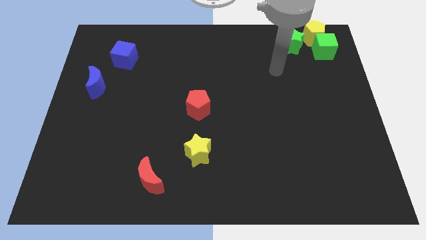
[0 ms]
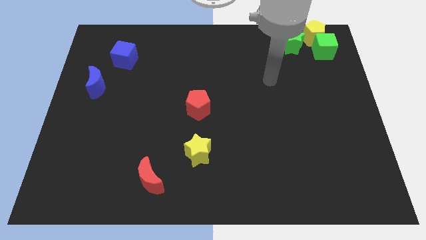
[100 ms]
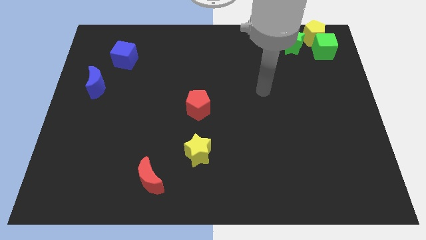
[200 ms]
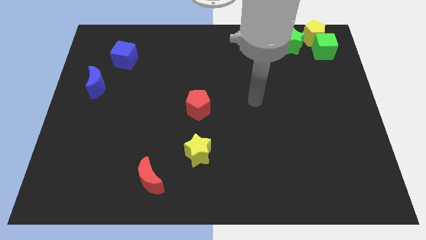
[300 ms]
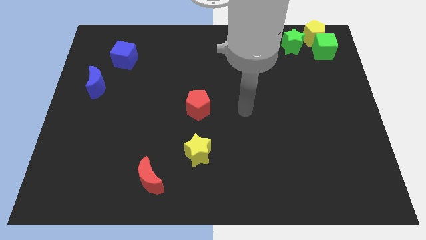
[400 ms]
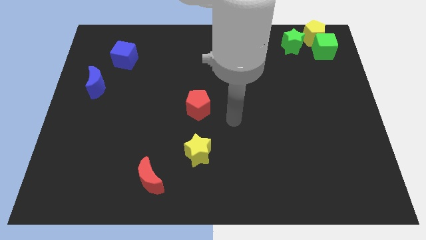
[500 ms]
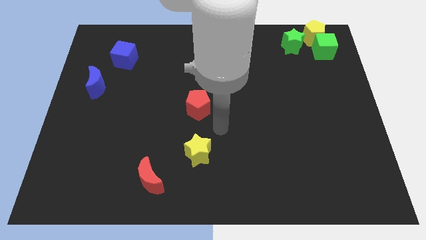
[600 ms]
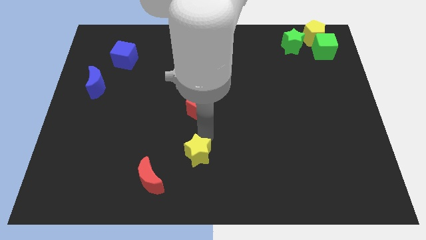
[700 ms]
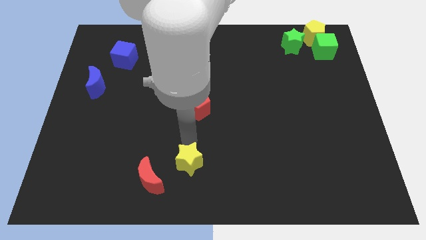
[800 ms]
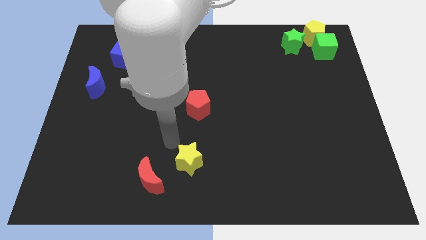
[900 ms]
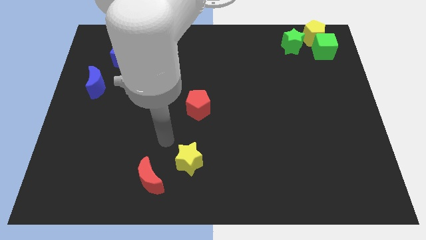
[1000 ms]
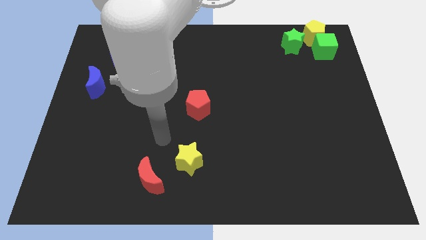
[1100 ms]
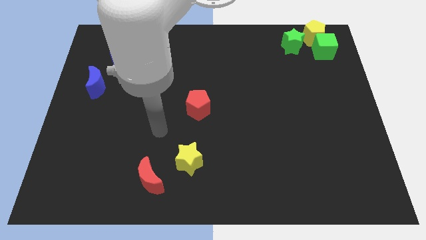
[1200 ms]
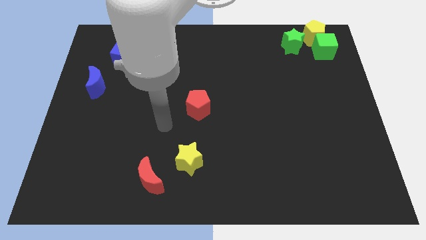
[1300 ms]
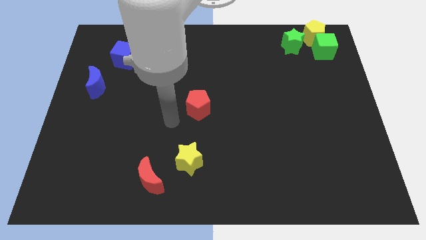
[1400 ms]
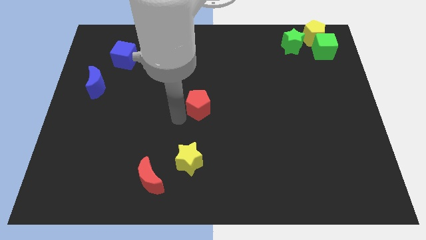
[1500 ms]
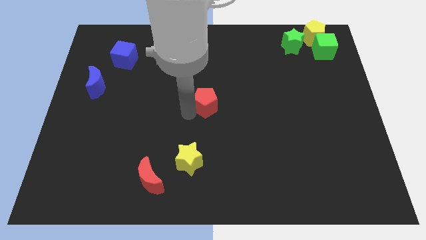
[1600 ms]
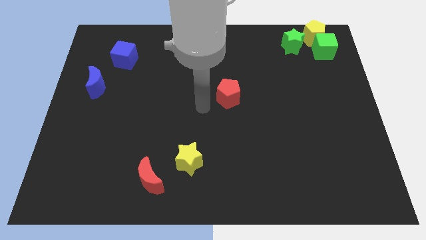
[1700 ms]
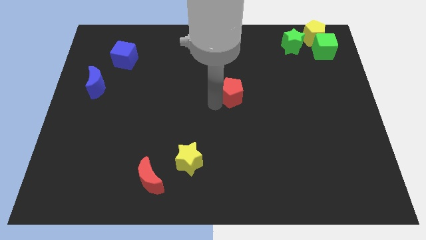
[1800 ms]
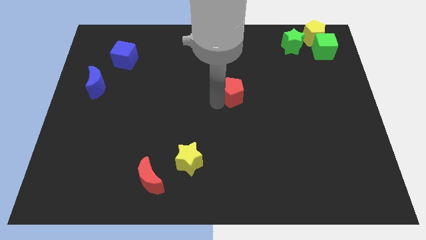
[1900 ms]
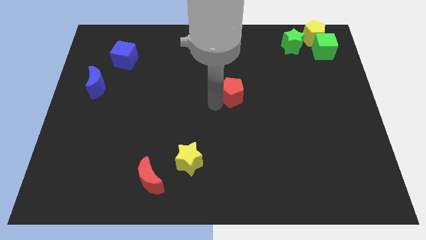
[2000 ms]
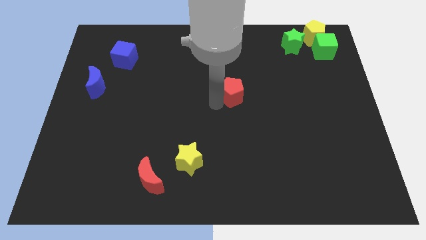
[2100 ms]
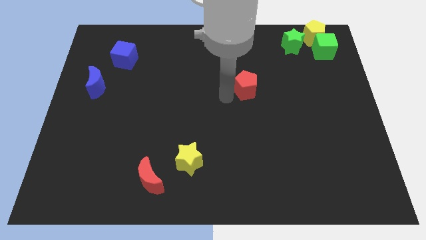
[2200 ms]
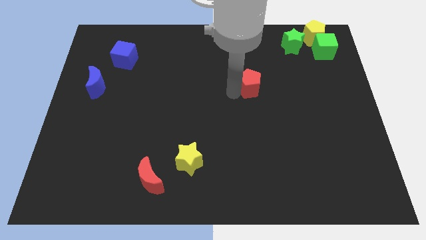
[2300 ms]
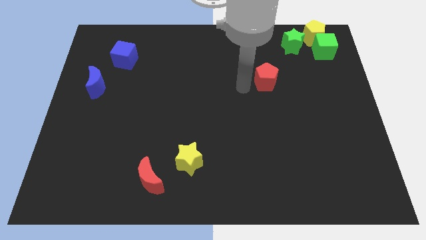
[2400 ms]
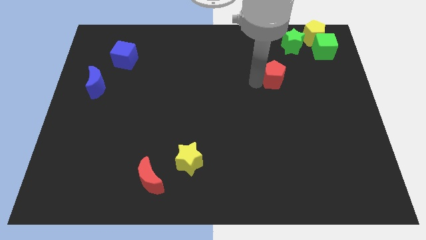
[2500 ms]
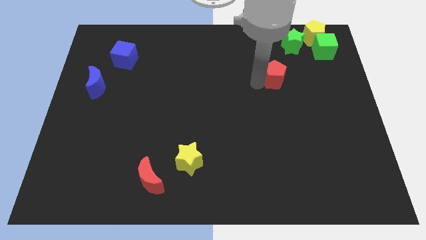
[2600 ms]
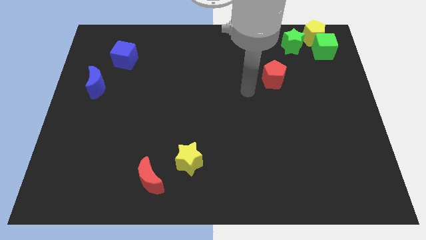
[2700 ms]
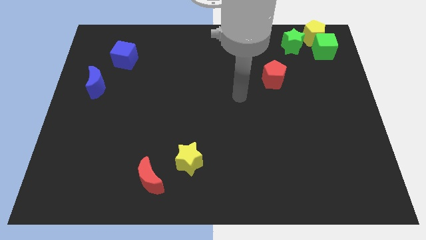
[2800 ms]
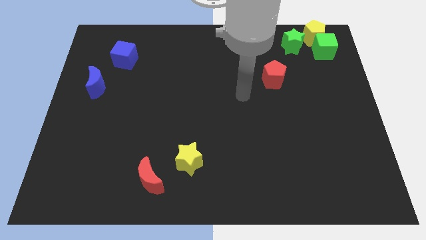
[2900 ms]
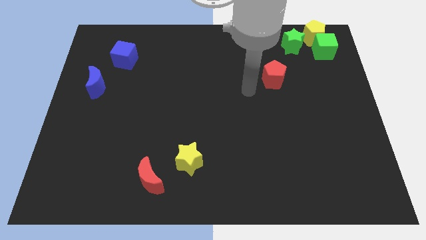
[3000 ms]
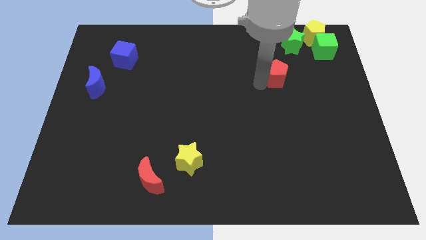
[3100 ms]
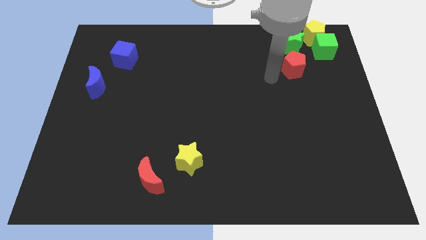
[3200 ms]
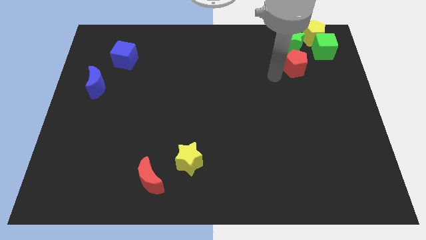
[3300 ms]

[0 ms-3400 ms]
push the red pentagon to bottom side of the green star

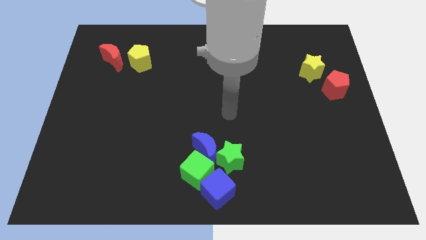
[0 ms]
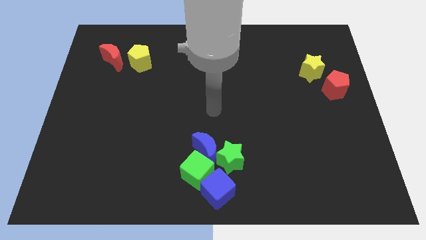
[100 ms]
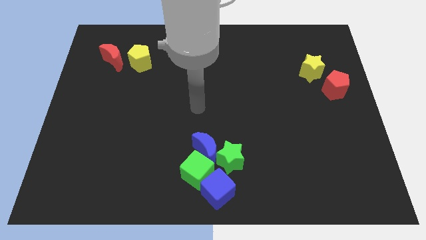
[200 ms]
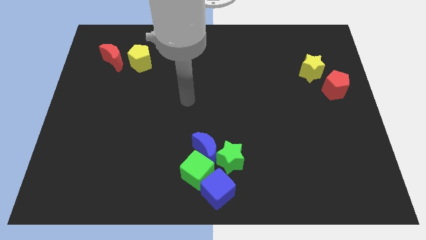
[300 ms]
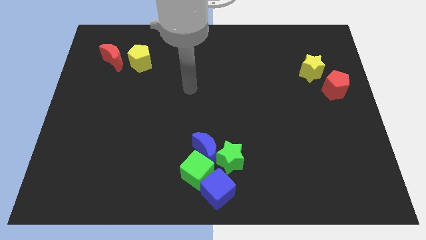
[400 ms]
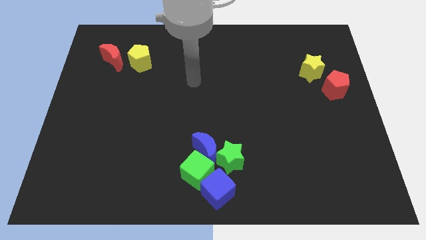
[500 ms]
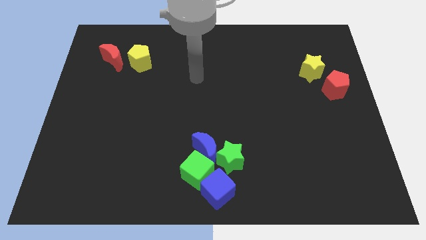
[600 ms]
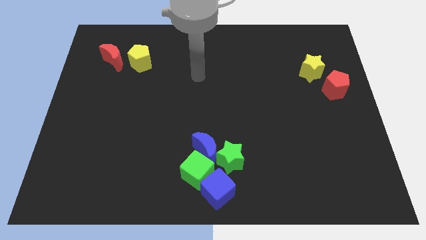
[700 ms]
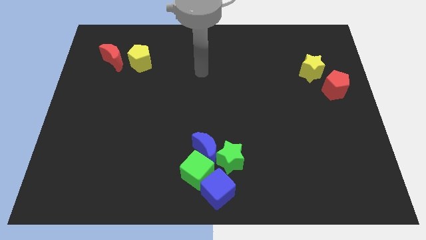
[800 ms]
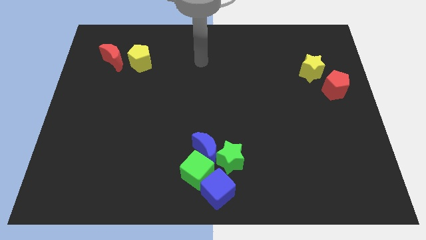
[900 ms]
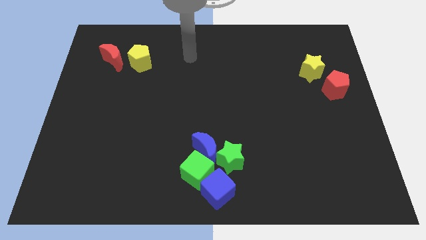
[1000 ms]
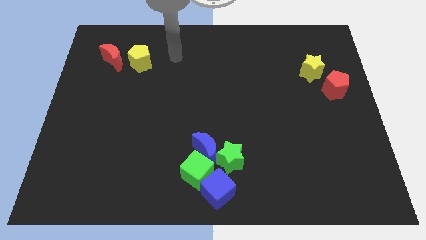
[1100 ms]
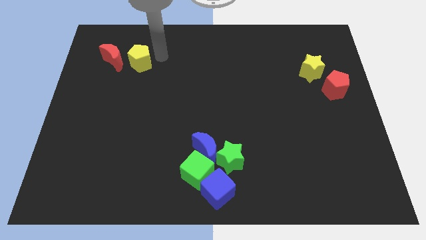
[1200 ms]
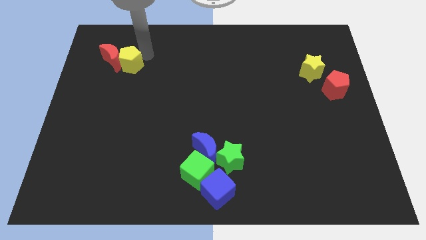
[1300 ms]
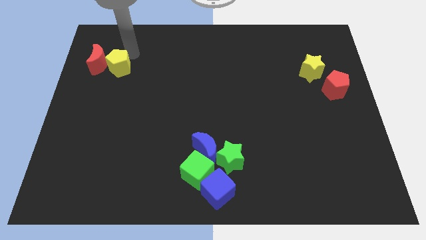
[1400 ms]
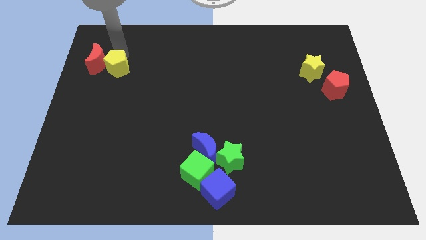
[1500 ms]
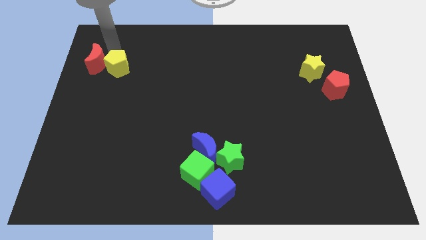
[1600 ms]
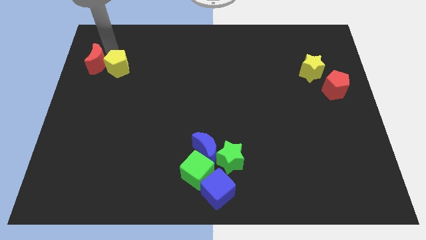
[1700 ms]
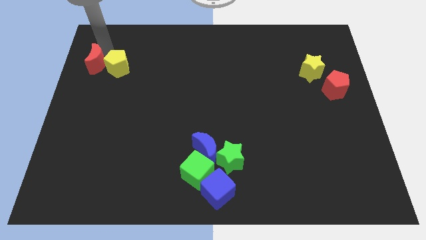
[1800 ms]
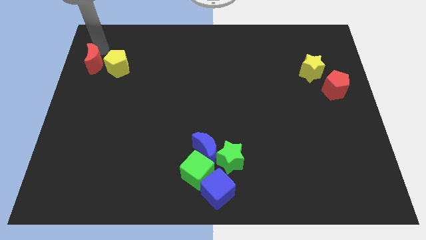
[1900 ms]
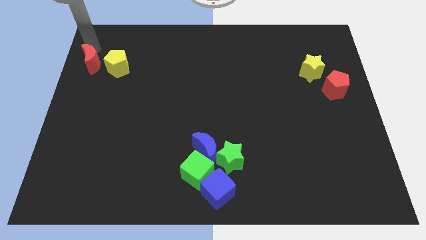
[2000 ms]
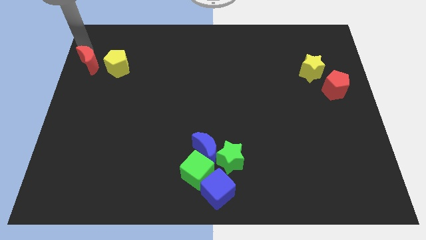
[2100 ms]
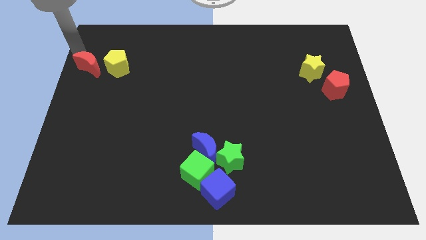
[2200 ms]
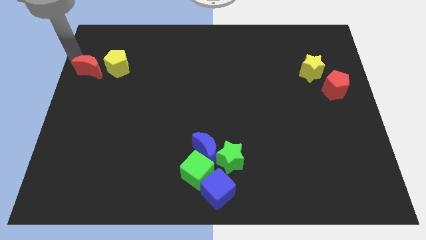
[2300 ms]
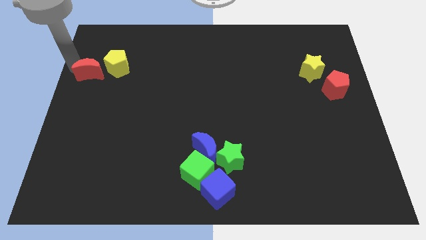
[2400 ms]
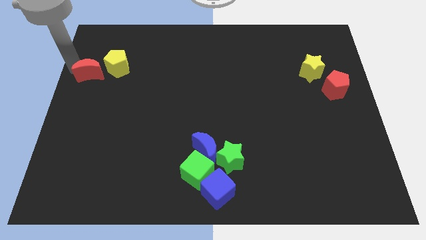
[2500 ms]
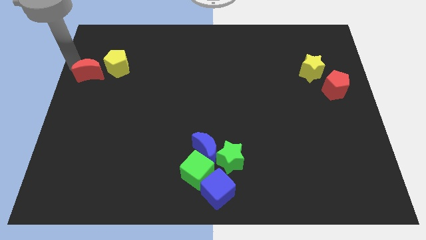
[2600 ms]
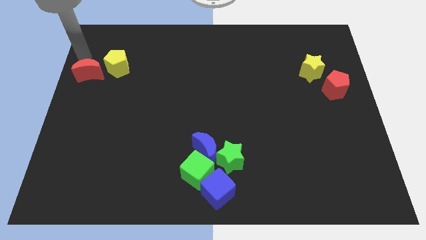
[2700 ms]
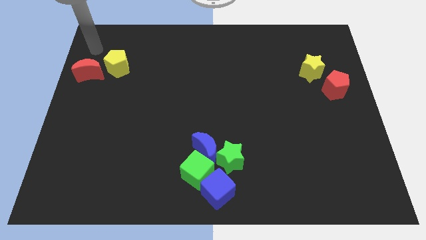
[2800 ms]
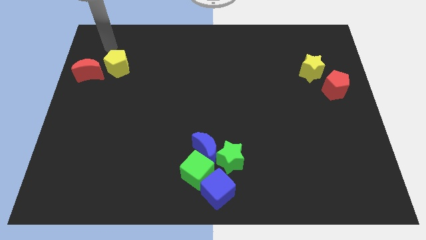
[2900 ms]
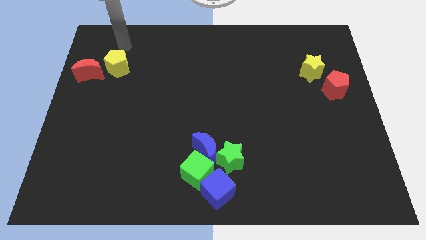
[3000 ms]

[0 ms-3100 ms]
place red crescent on the top left corner of the board

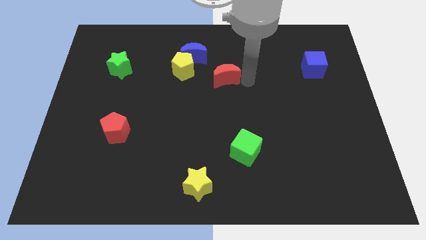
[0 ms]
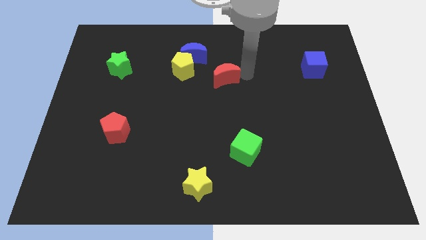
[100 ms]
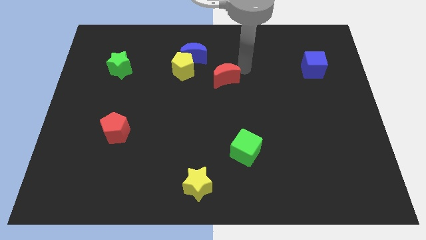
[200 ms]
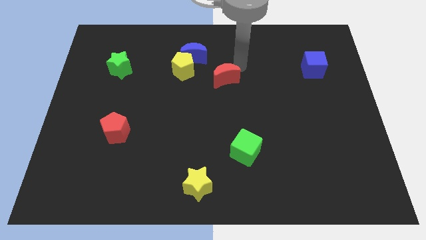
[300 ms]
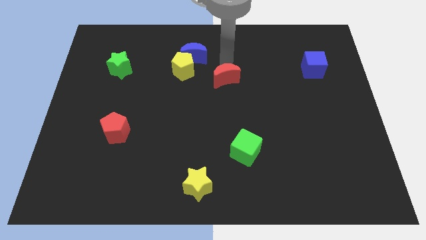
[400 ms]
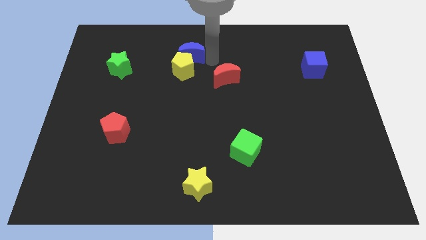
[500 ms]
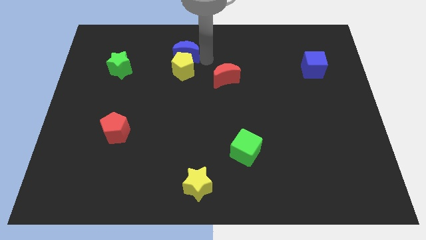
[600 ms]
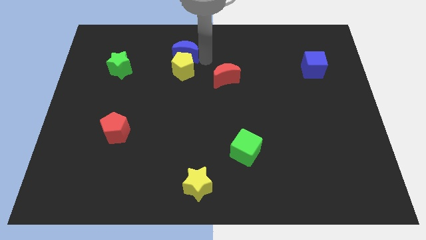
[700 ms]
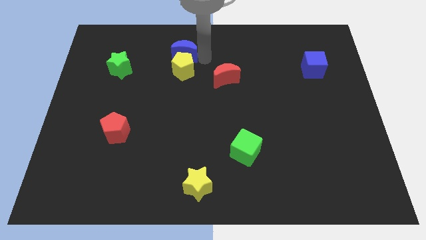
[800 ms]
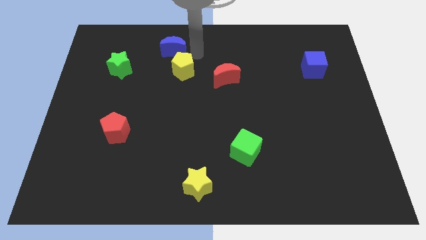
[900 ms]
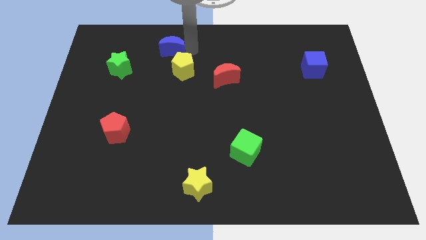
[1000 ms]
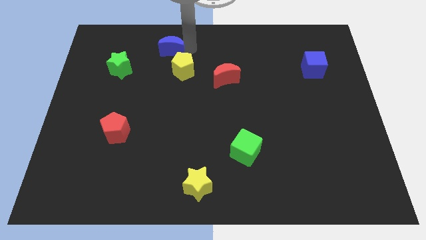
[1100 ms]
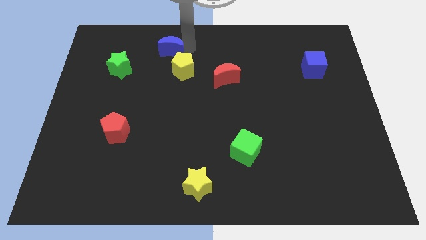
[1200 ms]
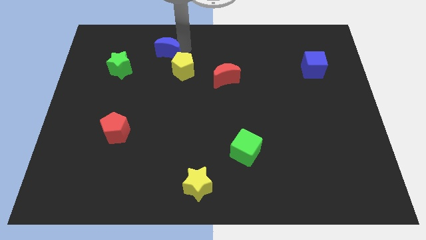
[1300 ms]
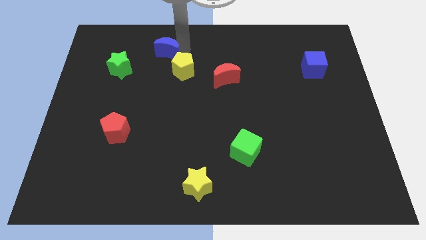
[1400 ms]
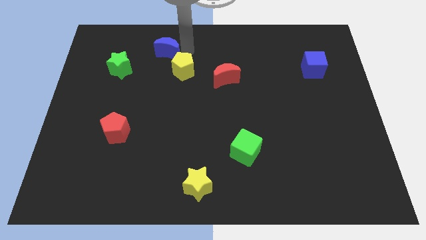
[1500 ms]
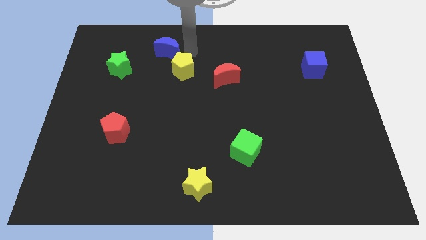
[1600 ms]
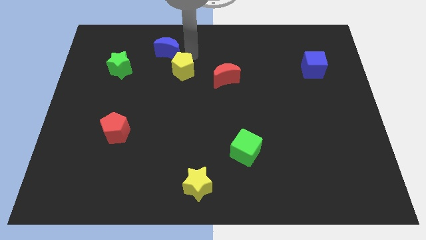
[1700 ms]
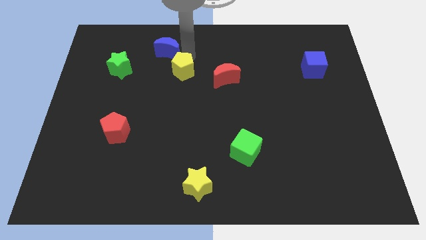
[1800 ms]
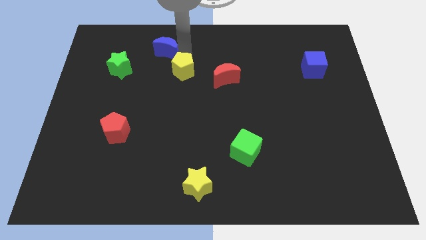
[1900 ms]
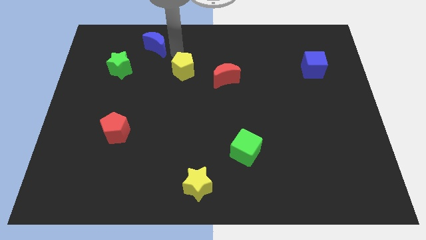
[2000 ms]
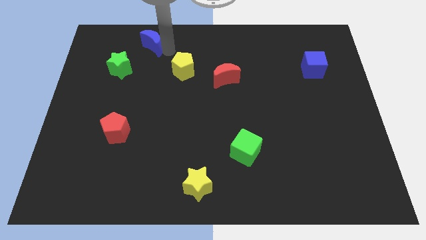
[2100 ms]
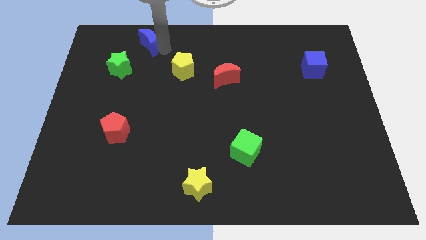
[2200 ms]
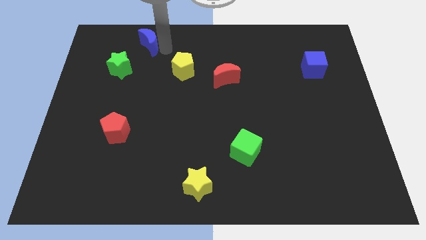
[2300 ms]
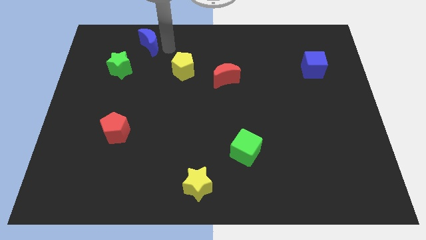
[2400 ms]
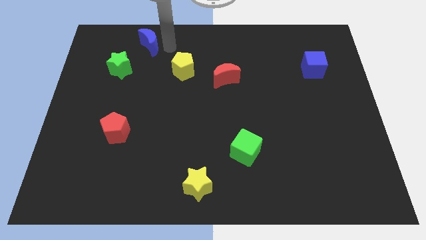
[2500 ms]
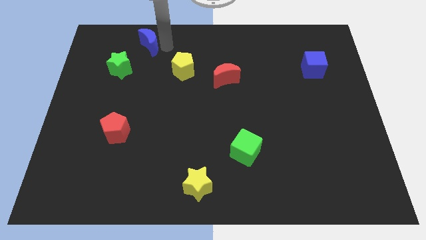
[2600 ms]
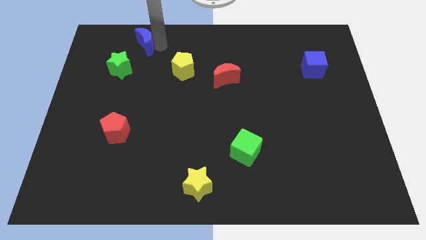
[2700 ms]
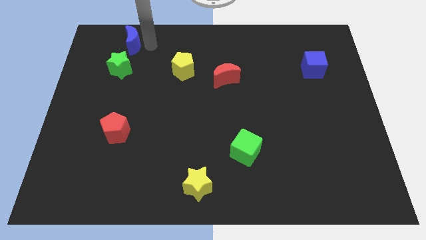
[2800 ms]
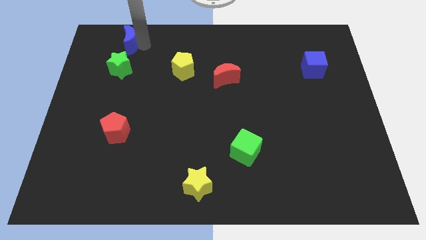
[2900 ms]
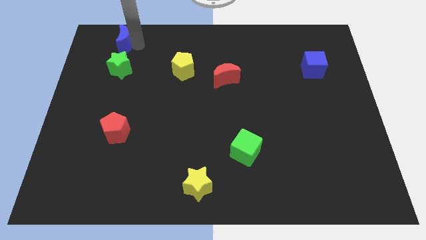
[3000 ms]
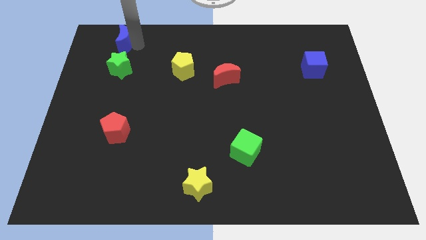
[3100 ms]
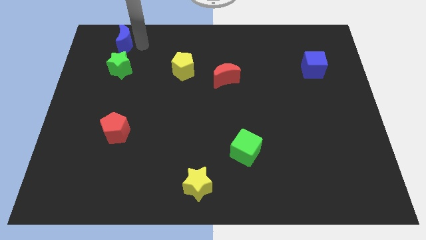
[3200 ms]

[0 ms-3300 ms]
push the blue moon above the green star
